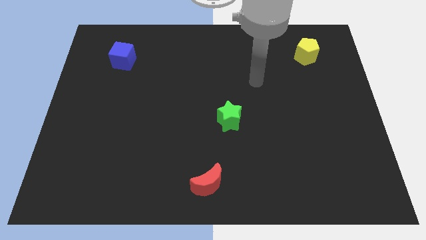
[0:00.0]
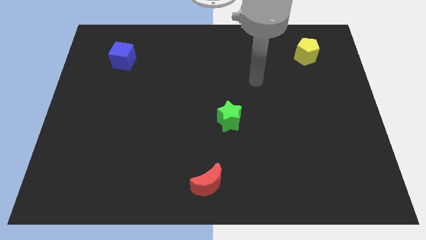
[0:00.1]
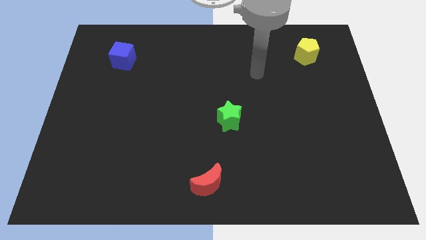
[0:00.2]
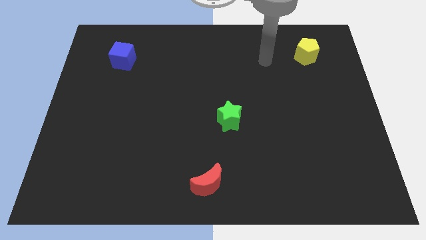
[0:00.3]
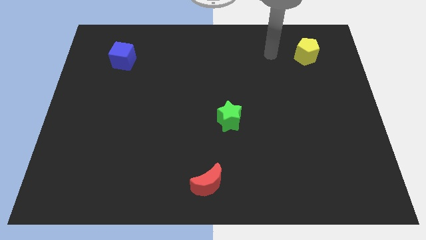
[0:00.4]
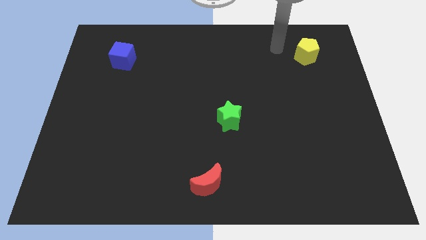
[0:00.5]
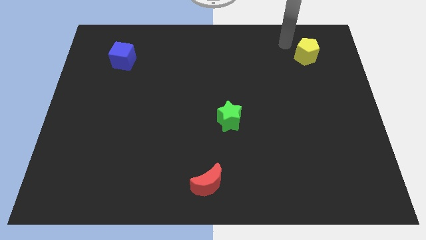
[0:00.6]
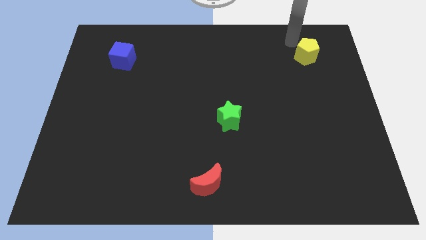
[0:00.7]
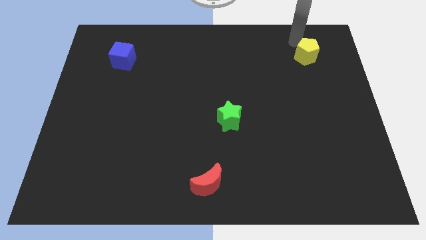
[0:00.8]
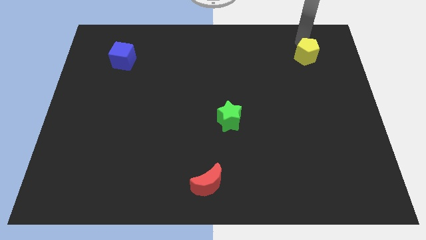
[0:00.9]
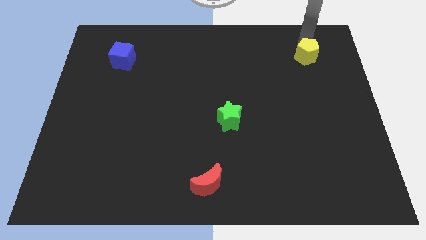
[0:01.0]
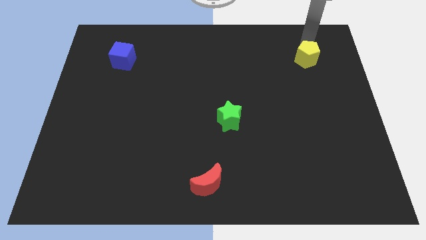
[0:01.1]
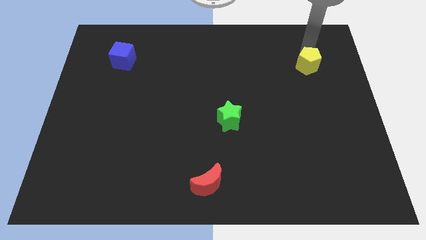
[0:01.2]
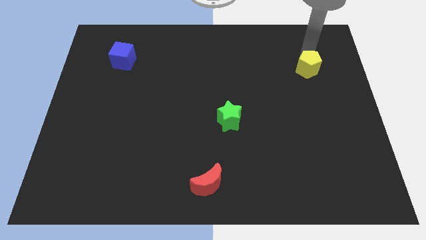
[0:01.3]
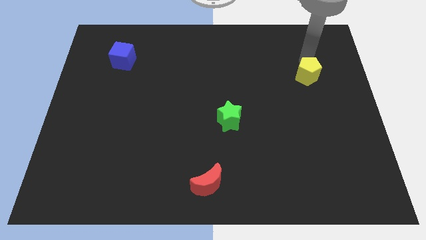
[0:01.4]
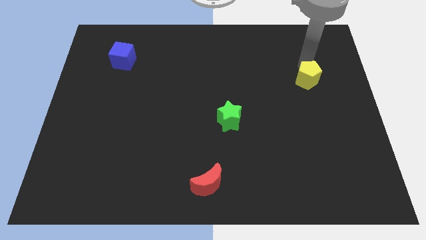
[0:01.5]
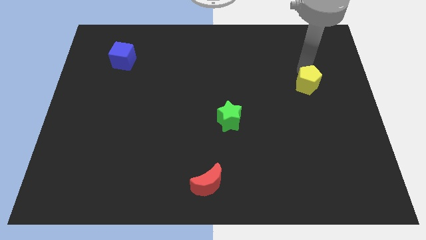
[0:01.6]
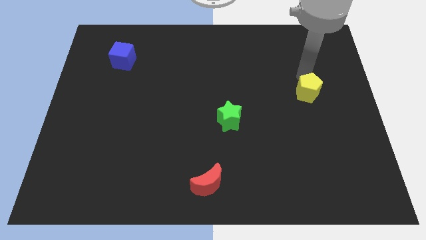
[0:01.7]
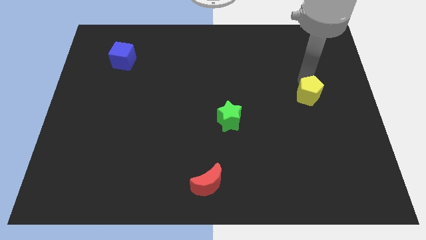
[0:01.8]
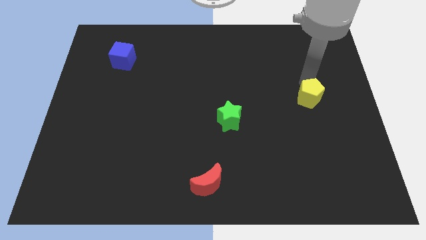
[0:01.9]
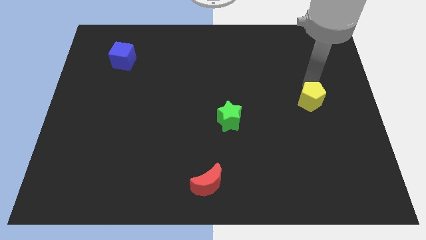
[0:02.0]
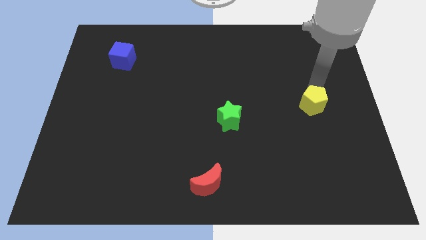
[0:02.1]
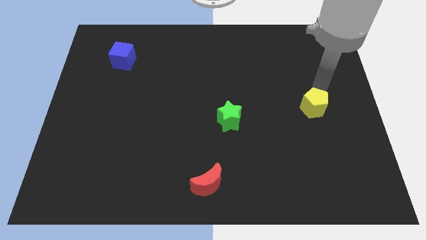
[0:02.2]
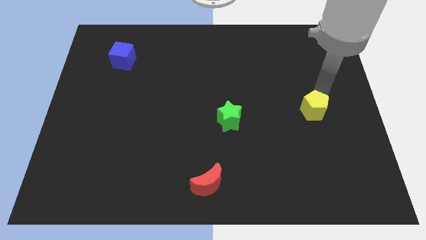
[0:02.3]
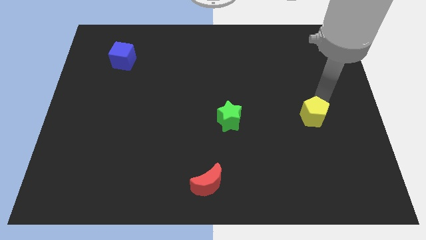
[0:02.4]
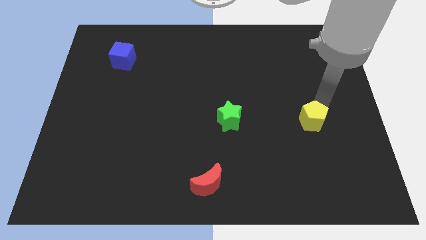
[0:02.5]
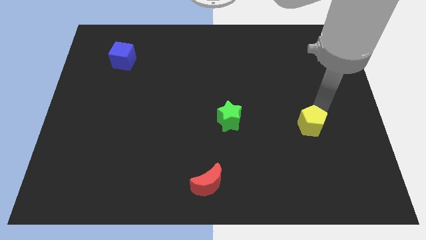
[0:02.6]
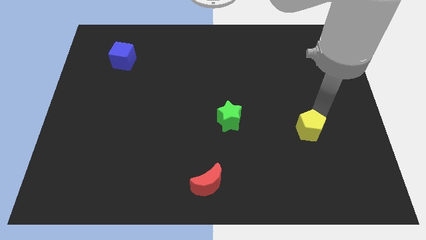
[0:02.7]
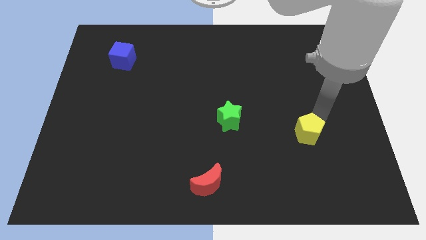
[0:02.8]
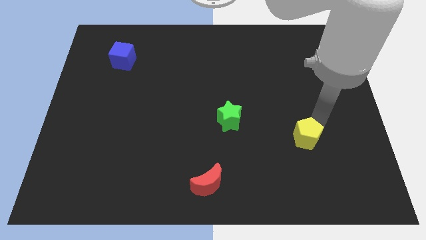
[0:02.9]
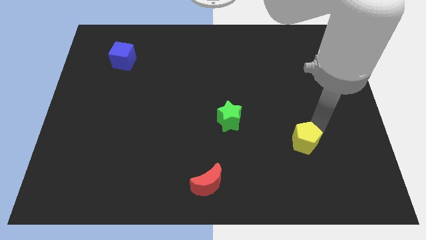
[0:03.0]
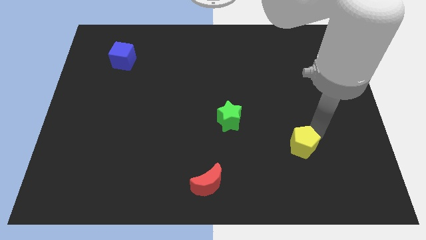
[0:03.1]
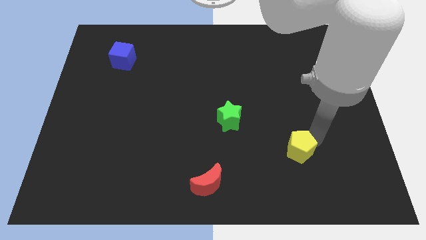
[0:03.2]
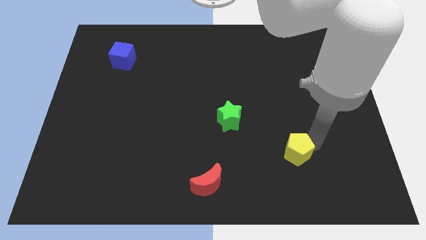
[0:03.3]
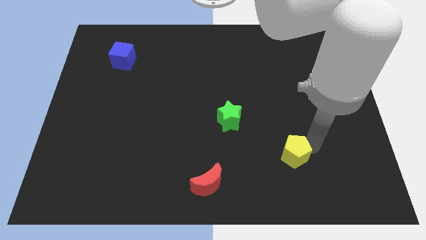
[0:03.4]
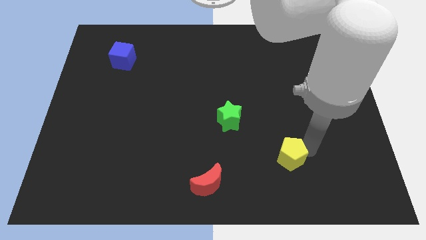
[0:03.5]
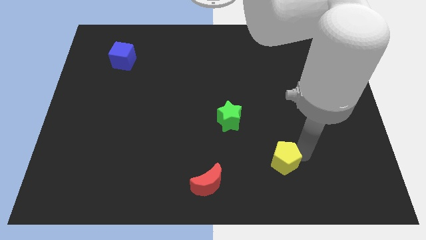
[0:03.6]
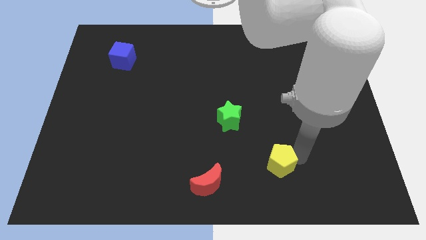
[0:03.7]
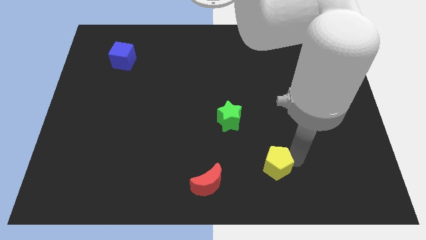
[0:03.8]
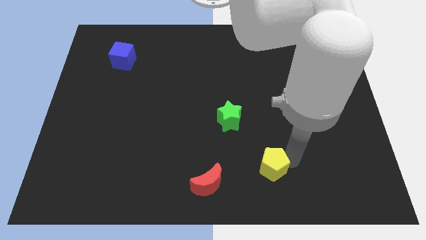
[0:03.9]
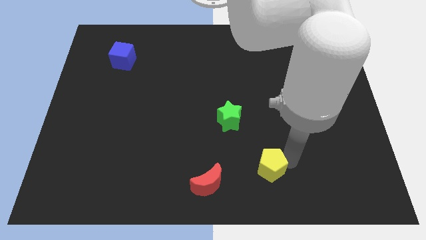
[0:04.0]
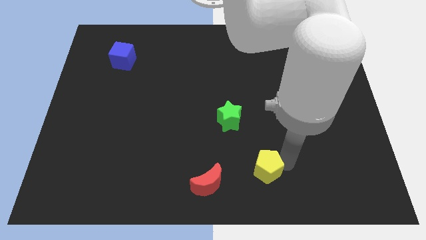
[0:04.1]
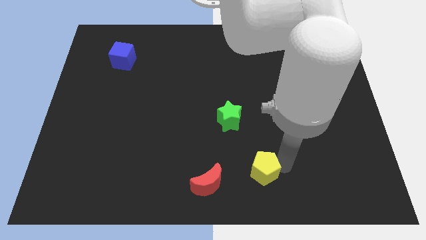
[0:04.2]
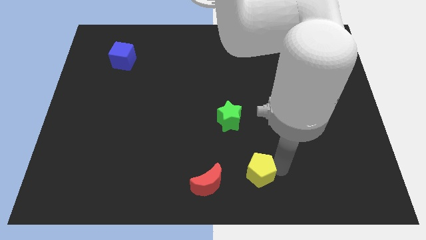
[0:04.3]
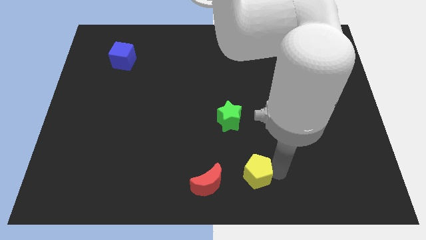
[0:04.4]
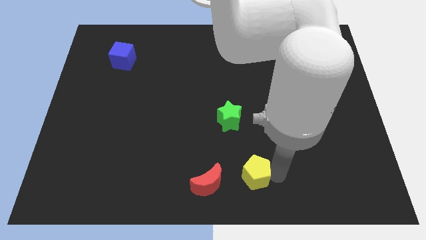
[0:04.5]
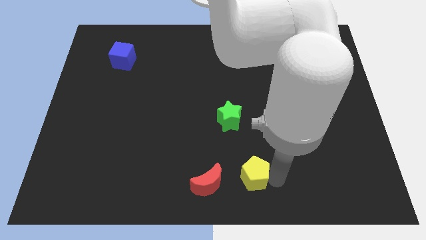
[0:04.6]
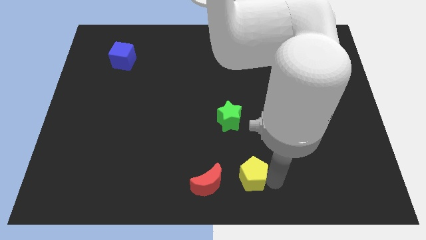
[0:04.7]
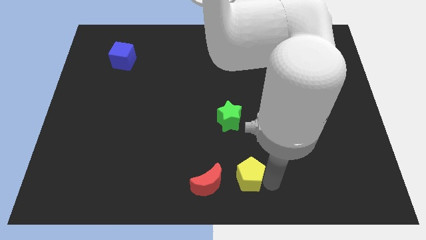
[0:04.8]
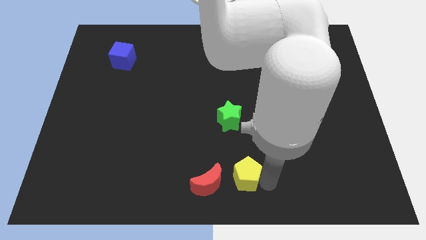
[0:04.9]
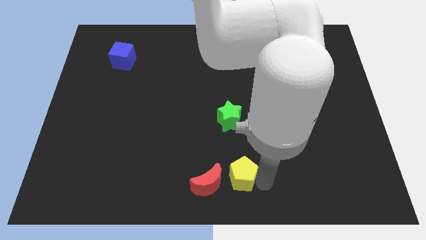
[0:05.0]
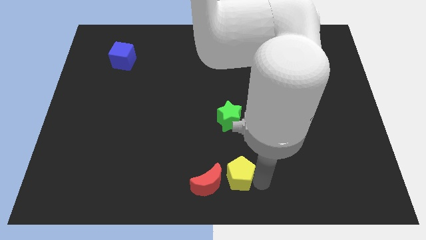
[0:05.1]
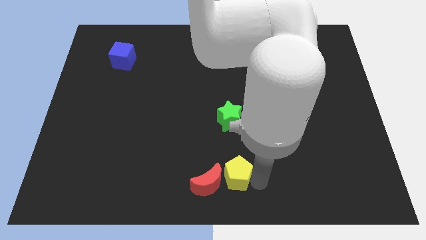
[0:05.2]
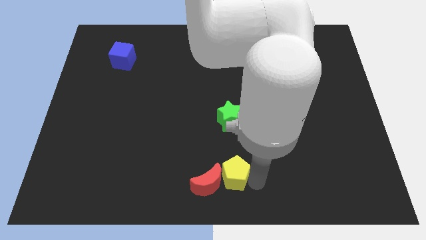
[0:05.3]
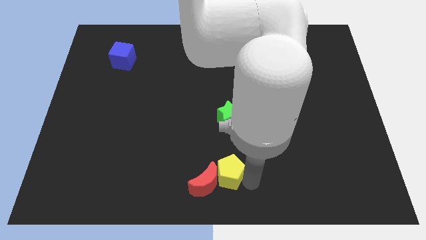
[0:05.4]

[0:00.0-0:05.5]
move the yellow pentagon towards the moon

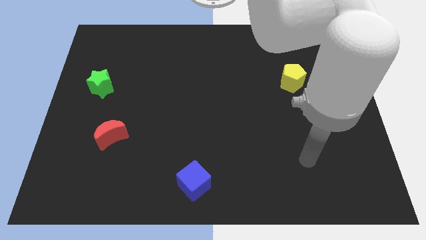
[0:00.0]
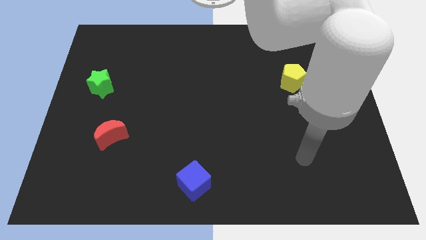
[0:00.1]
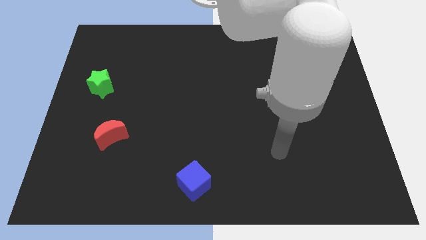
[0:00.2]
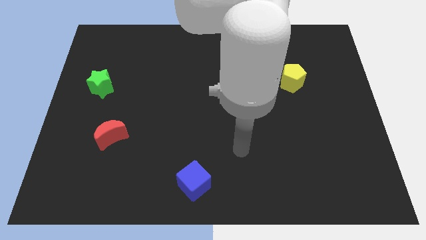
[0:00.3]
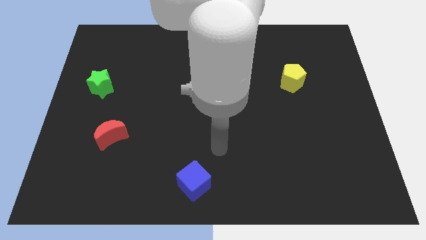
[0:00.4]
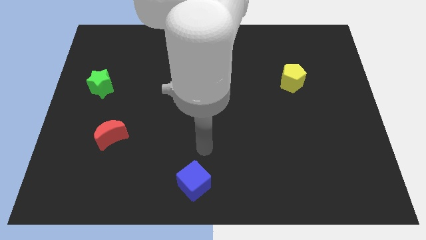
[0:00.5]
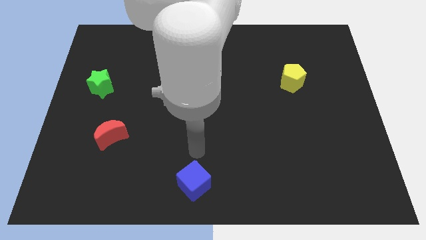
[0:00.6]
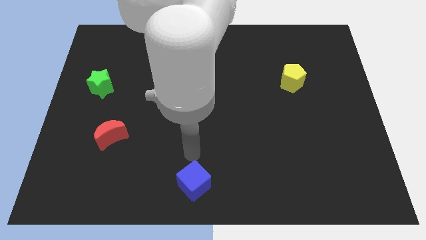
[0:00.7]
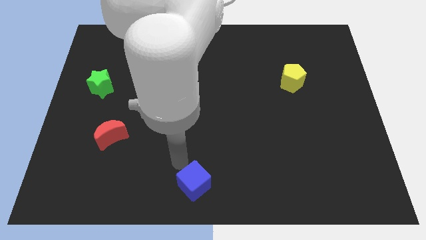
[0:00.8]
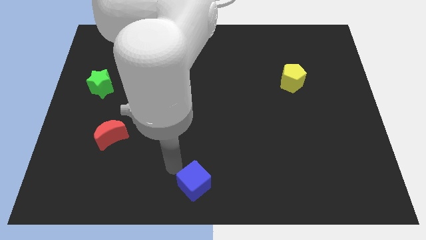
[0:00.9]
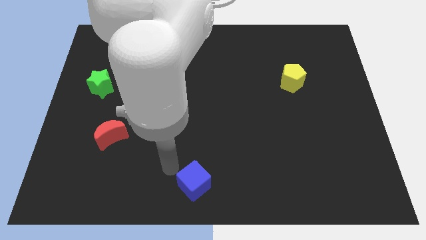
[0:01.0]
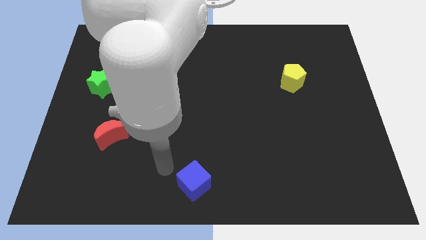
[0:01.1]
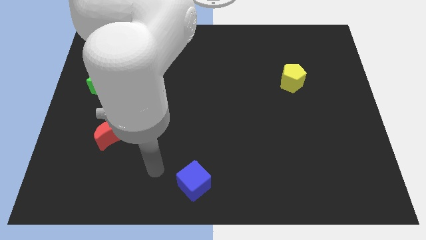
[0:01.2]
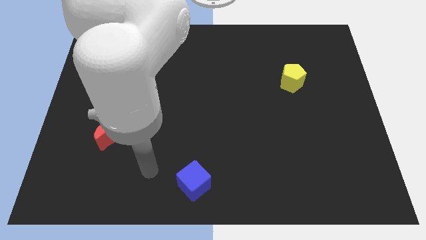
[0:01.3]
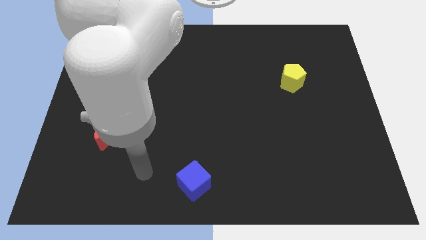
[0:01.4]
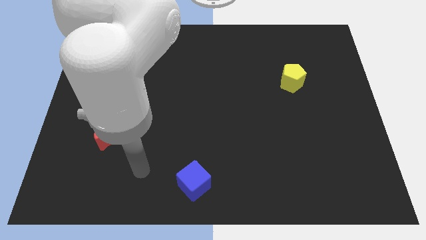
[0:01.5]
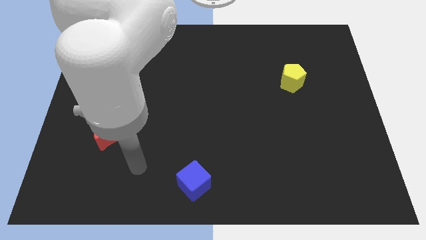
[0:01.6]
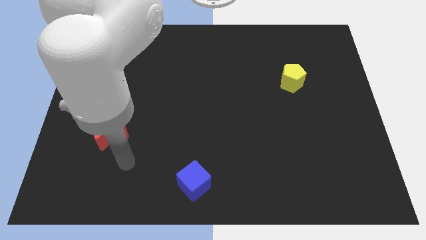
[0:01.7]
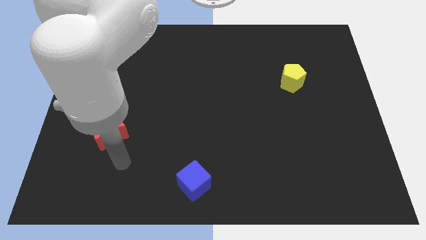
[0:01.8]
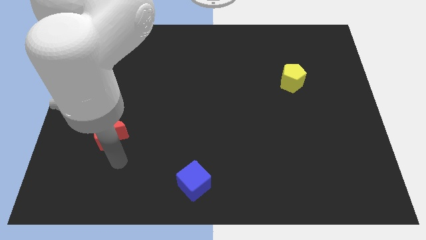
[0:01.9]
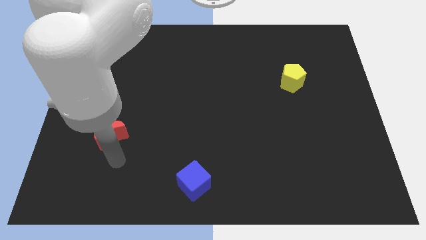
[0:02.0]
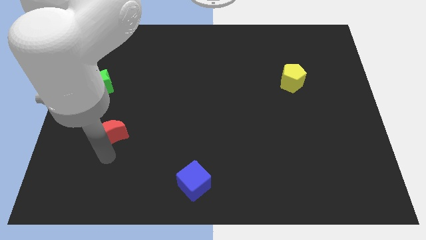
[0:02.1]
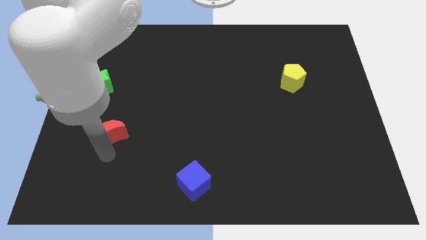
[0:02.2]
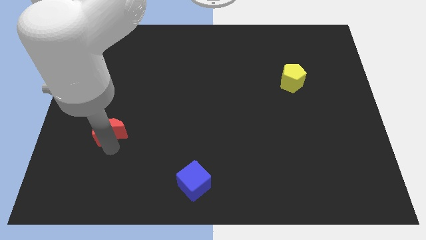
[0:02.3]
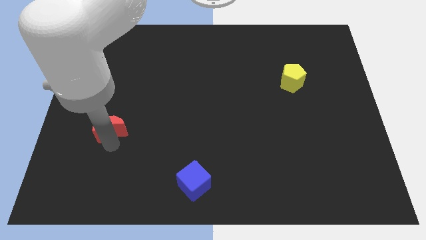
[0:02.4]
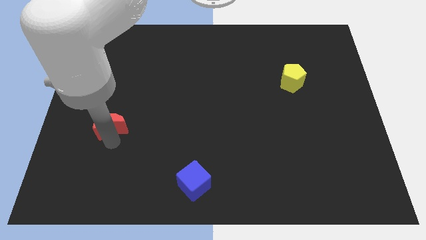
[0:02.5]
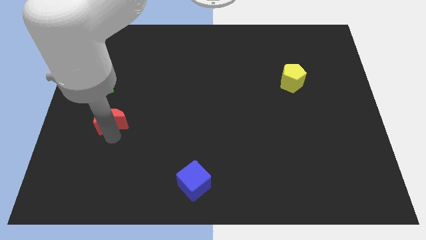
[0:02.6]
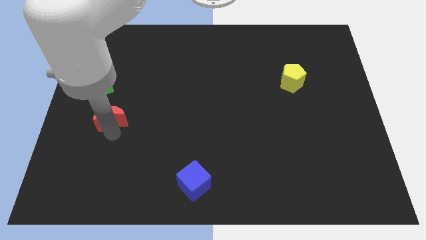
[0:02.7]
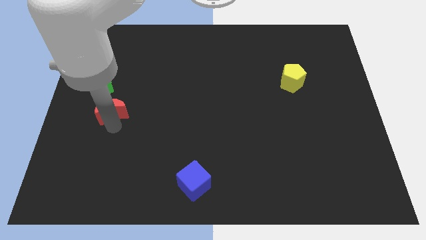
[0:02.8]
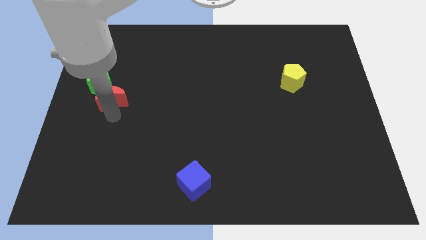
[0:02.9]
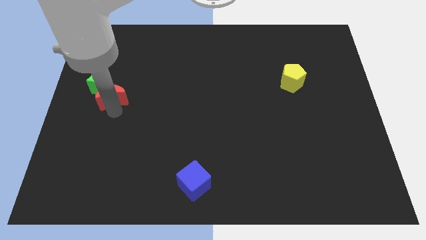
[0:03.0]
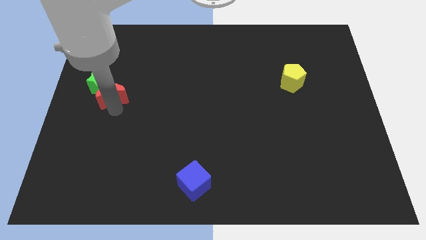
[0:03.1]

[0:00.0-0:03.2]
push the moon towards the green block
